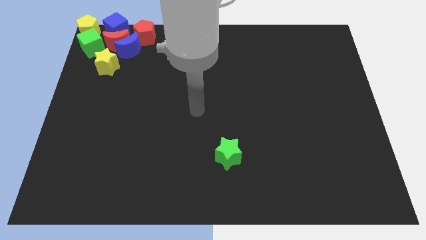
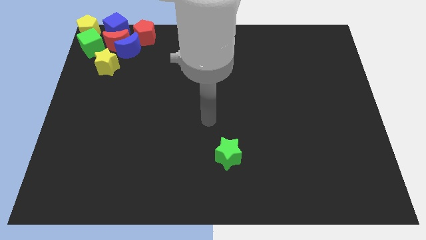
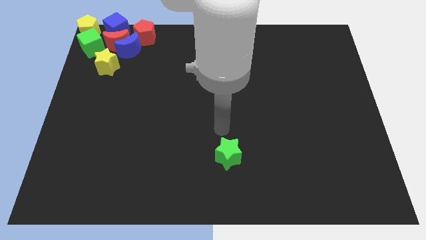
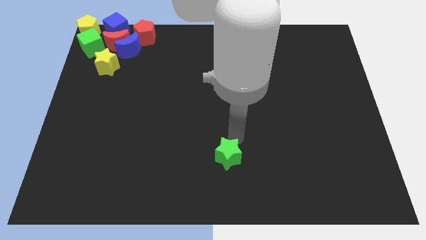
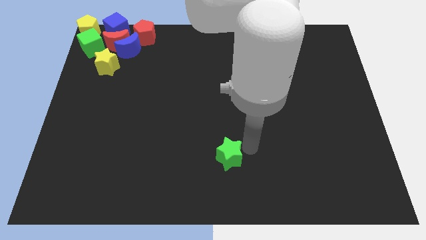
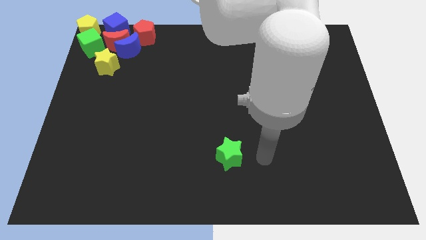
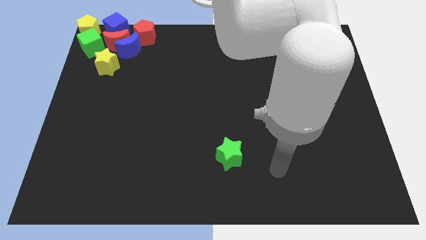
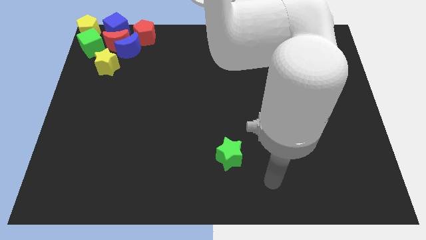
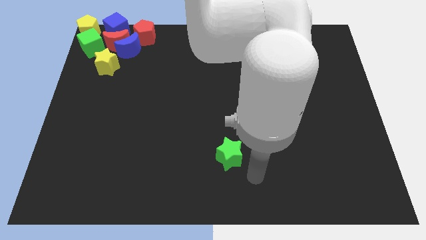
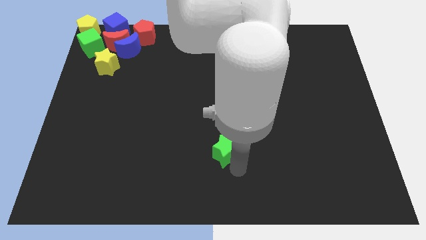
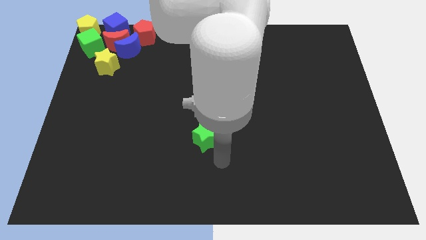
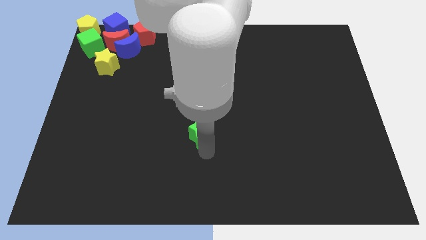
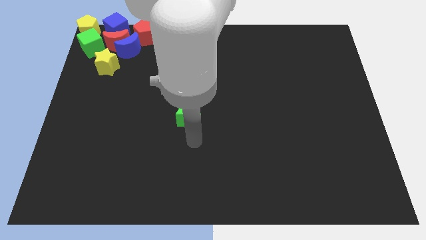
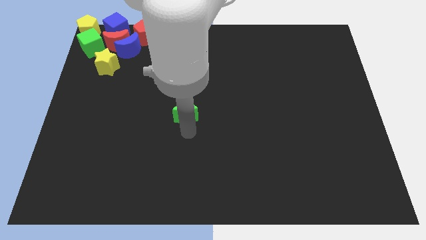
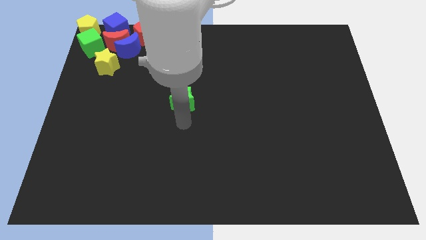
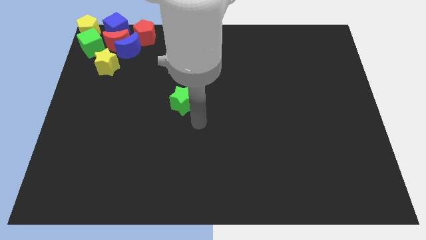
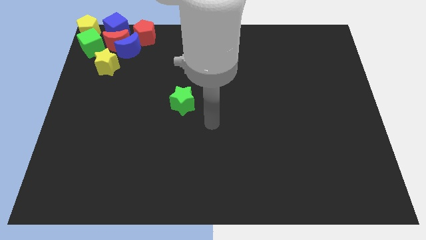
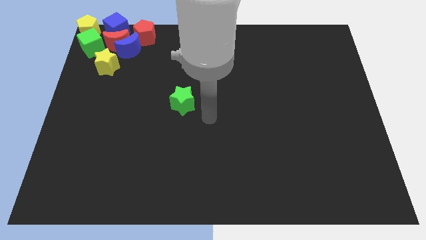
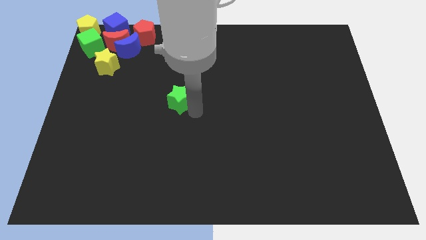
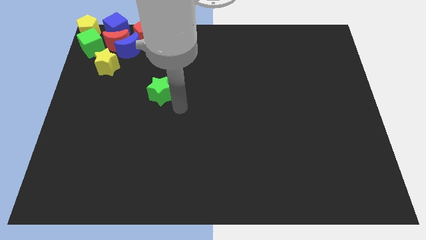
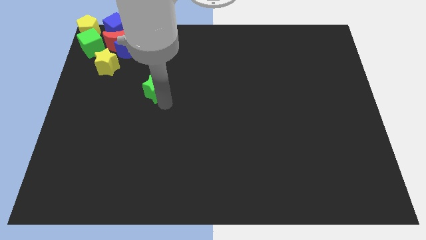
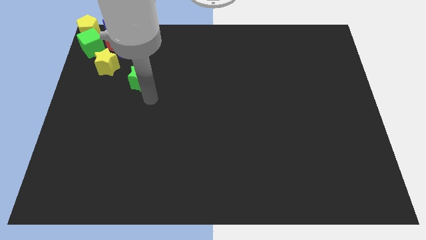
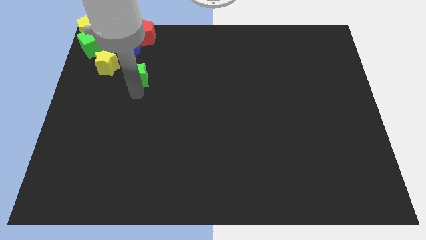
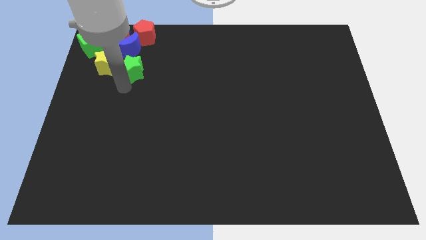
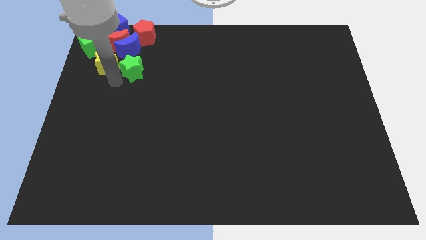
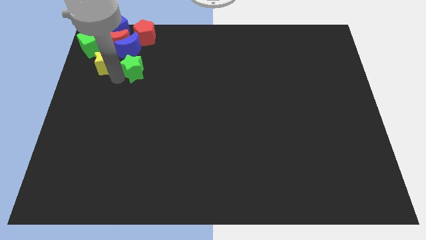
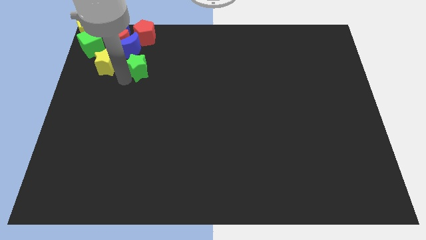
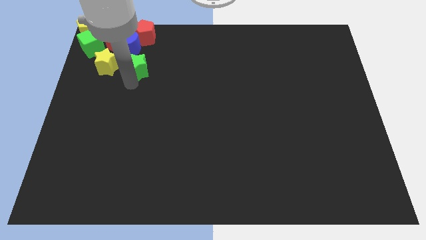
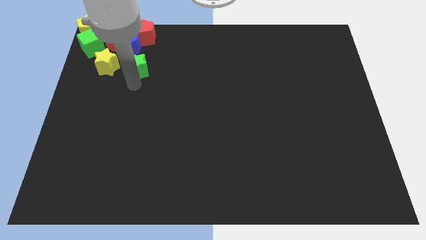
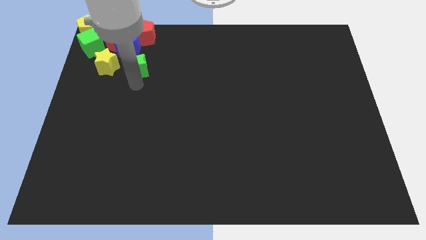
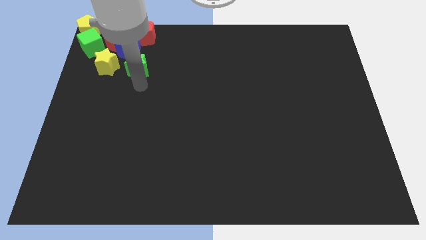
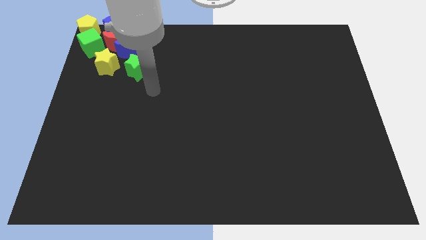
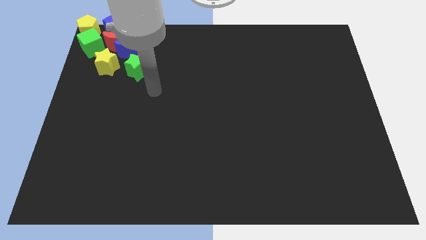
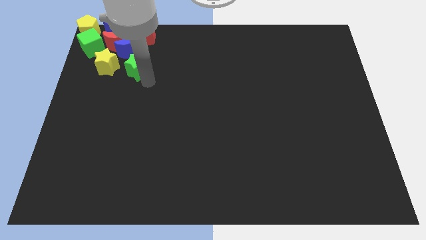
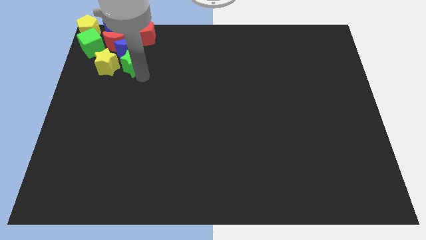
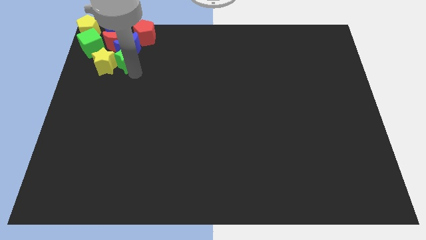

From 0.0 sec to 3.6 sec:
place the green star to the right side of the yellow star

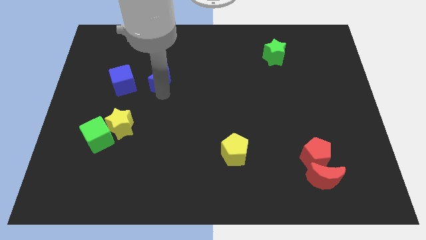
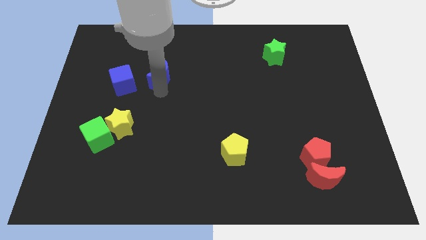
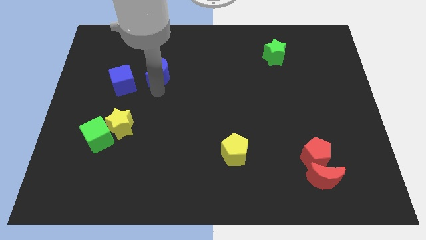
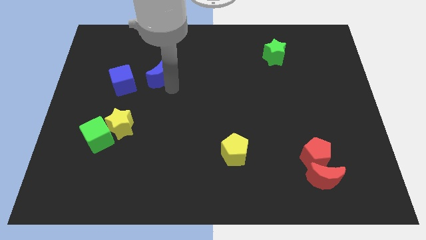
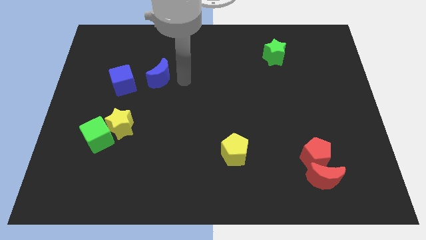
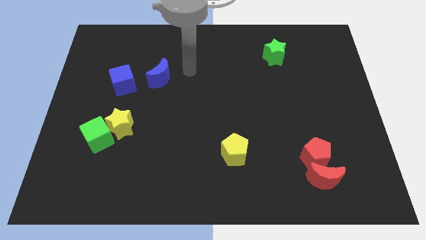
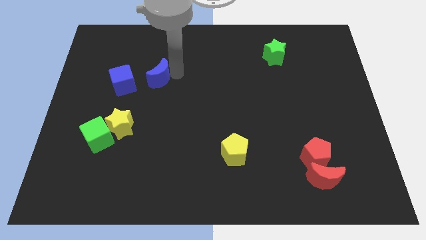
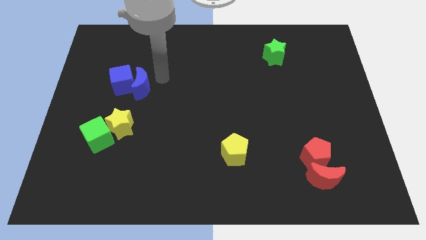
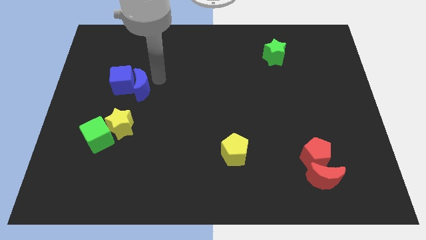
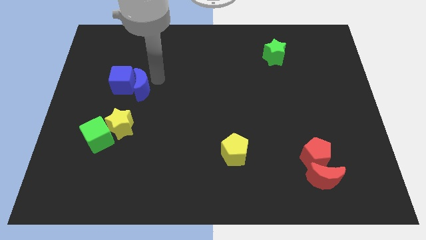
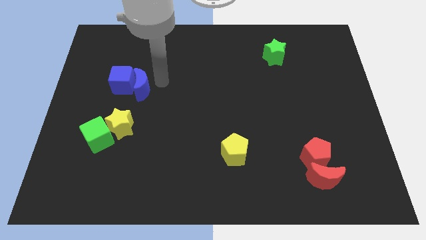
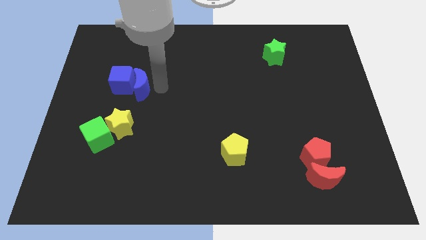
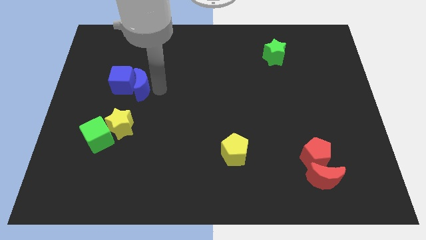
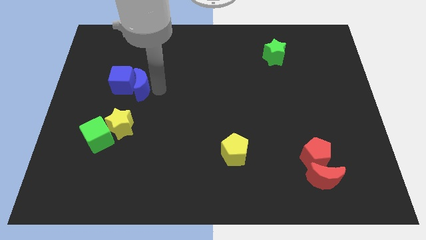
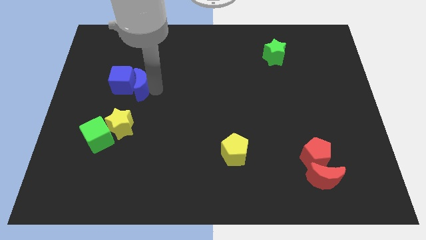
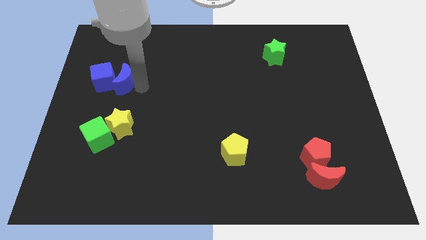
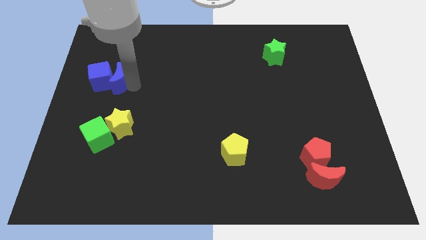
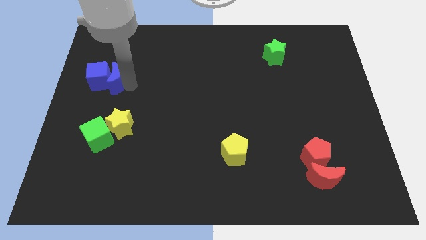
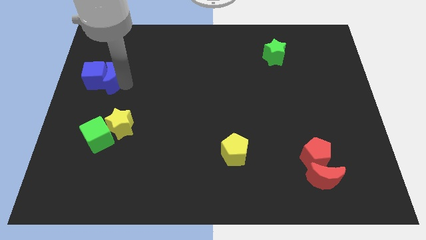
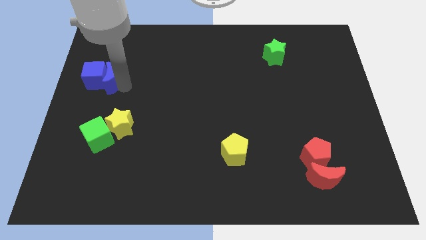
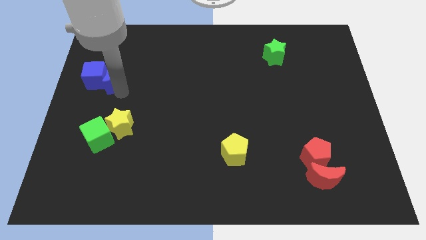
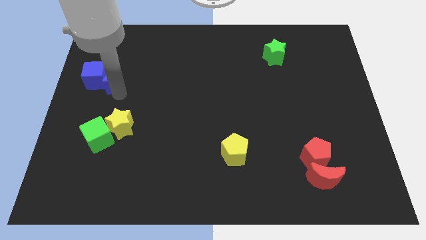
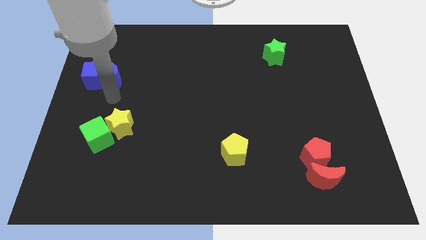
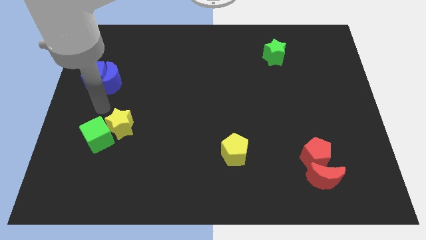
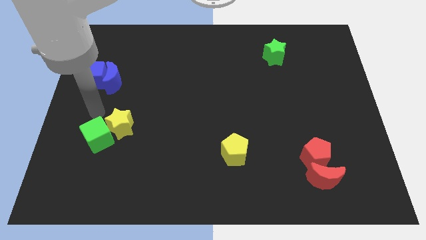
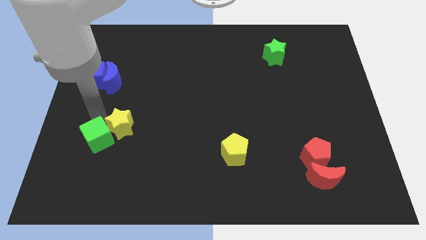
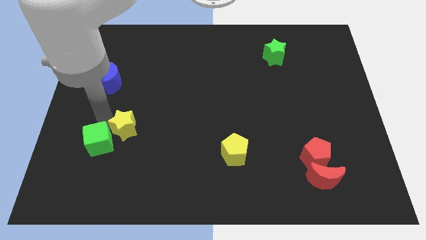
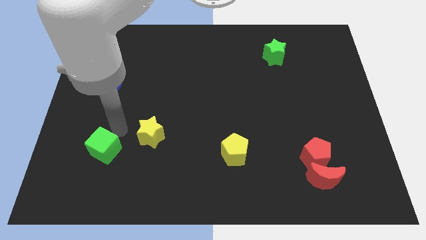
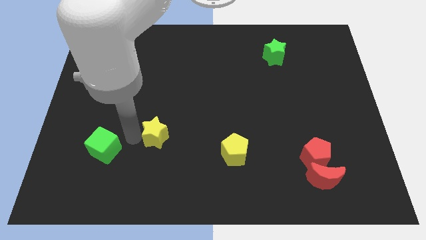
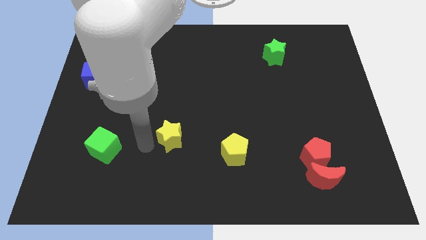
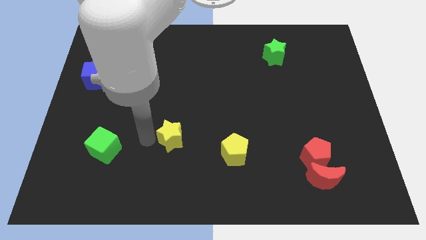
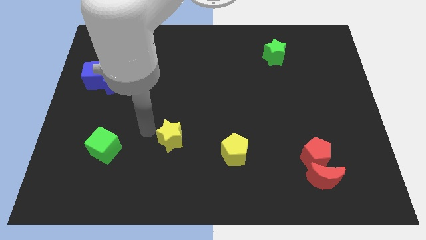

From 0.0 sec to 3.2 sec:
separate green cube and yellow star

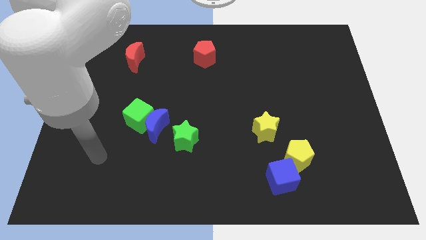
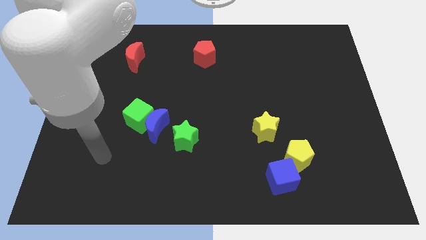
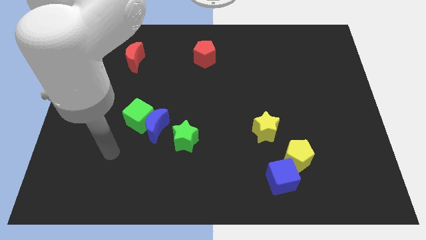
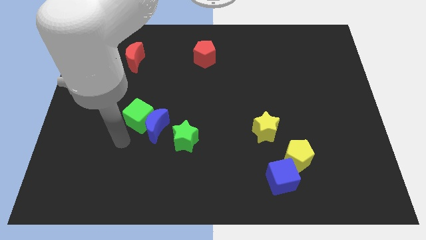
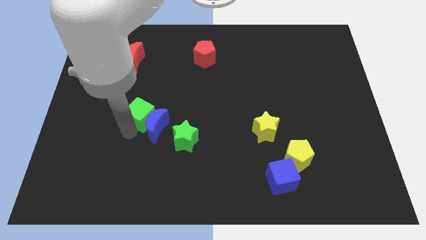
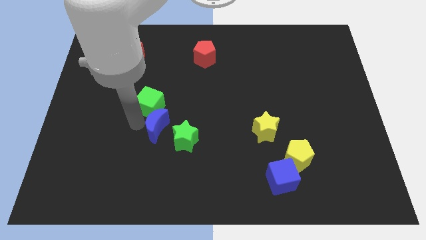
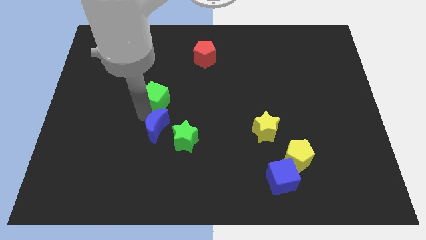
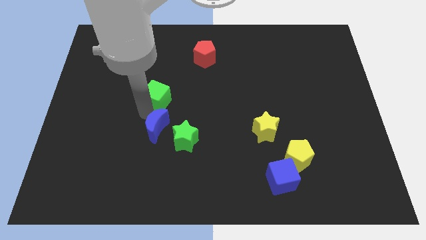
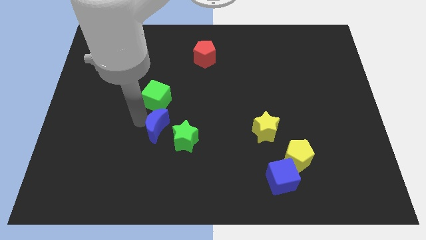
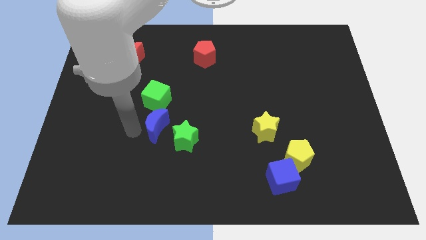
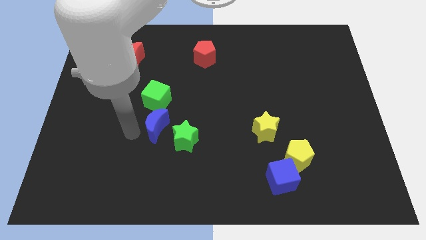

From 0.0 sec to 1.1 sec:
push the green cube to the top of the blue crescent

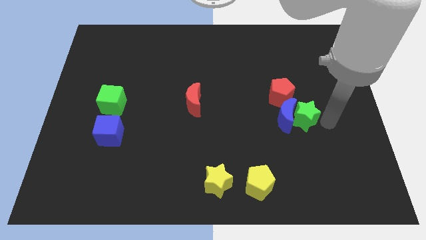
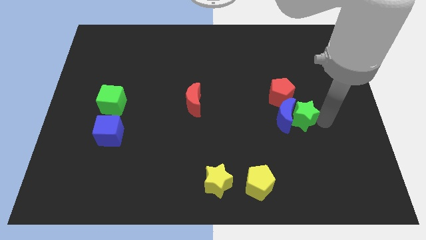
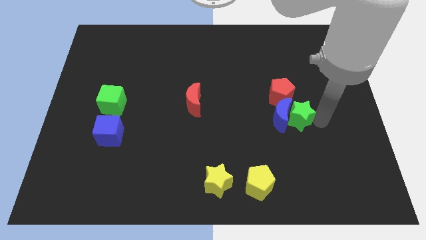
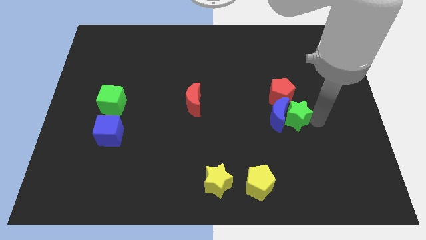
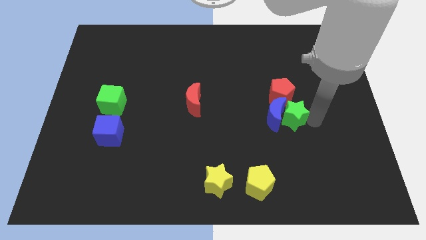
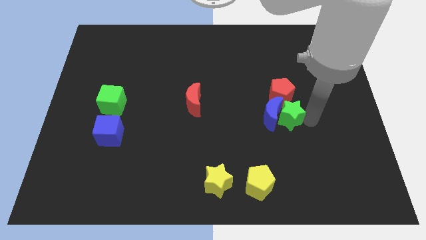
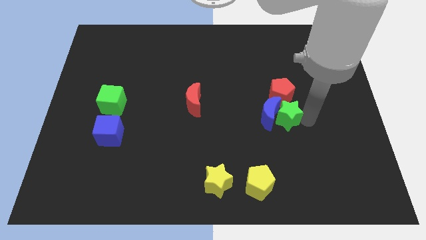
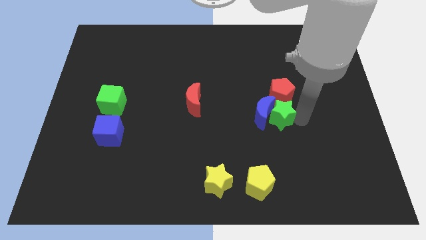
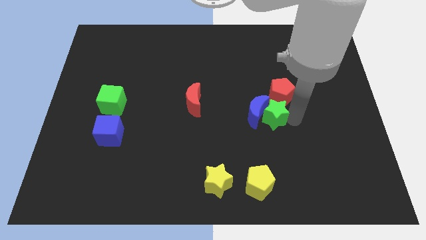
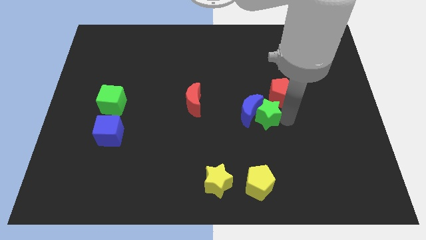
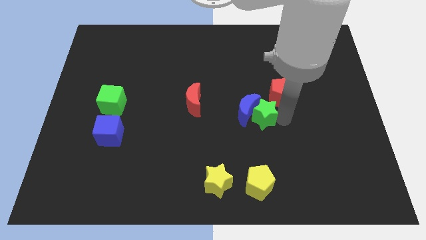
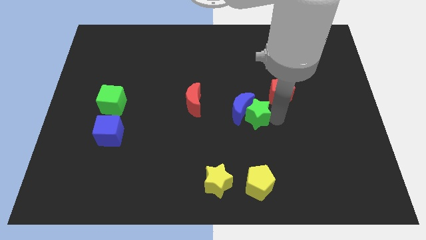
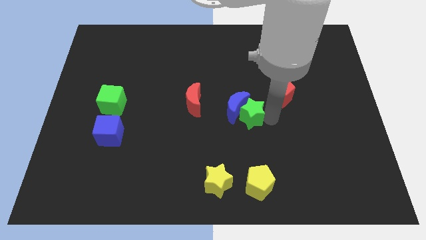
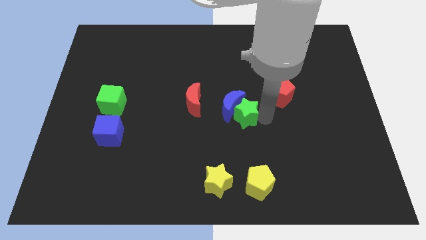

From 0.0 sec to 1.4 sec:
push the blue crescent towards the center of the board using the green star
